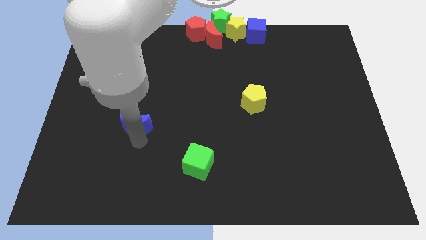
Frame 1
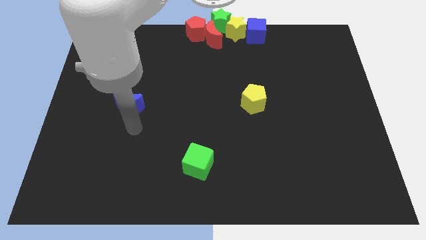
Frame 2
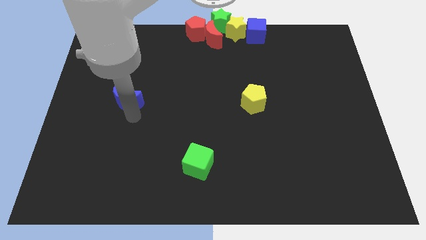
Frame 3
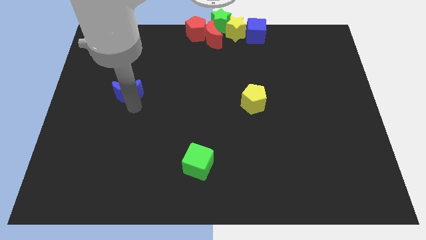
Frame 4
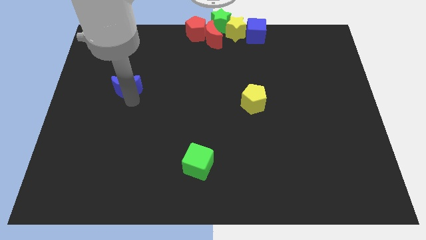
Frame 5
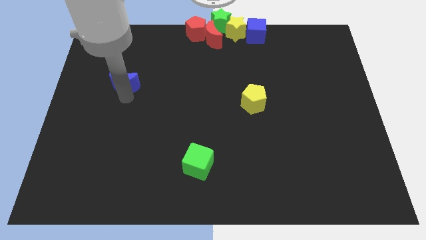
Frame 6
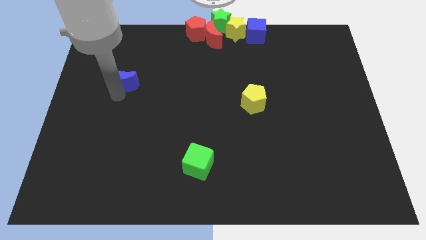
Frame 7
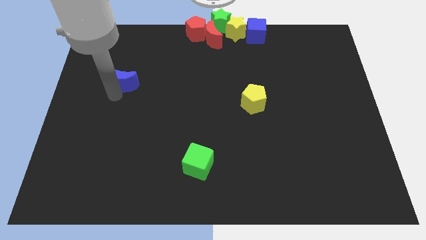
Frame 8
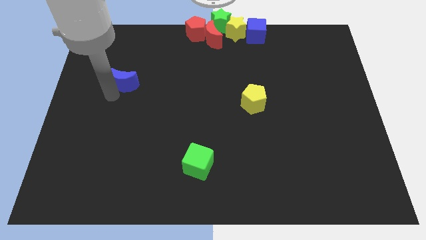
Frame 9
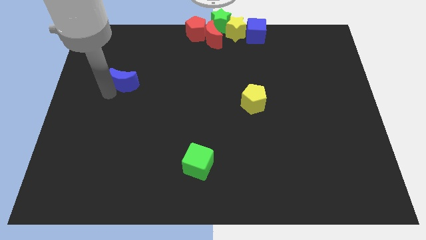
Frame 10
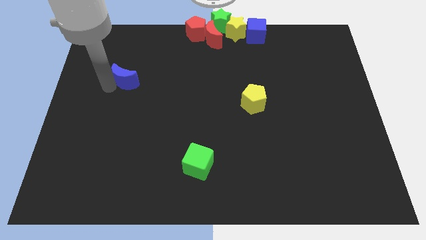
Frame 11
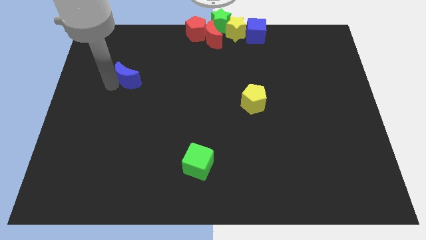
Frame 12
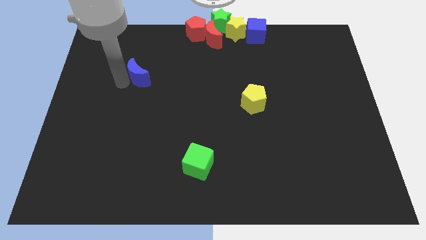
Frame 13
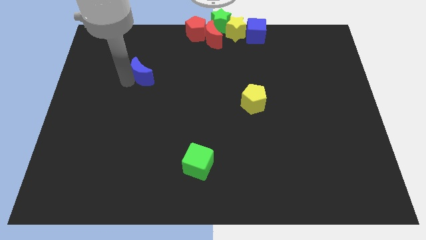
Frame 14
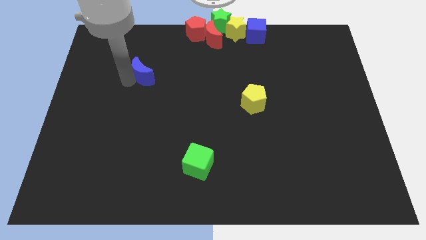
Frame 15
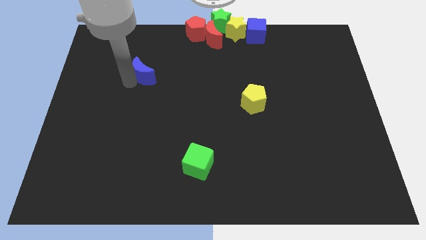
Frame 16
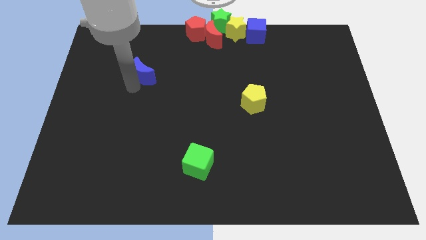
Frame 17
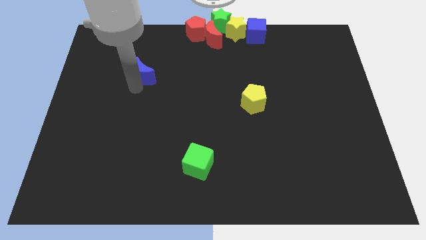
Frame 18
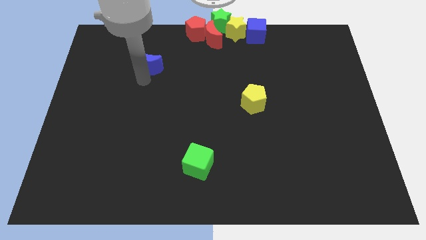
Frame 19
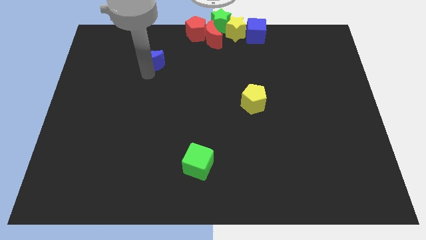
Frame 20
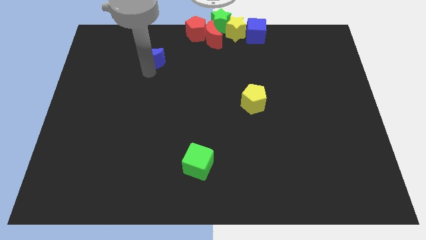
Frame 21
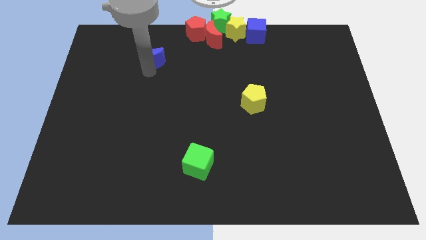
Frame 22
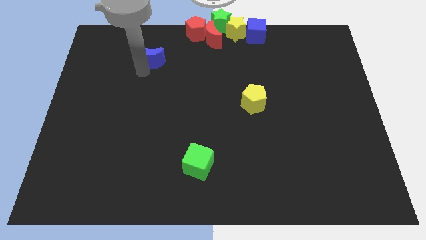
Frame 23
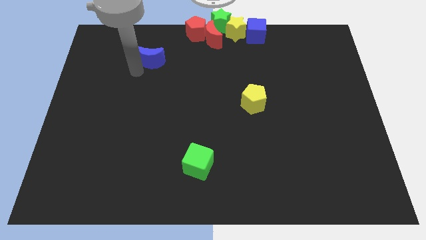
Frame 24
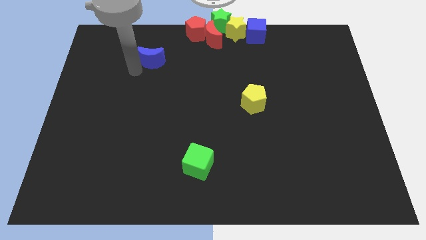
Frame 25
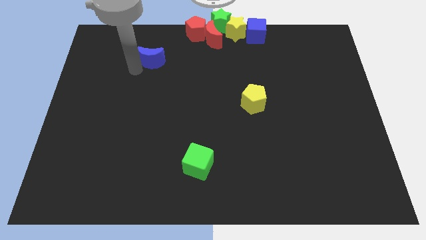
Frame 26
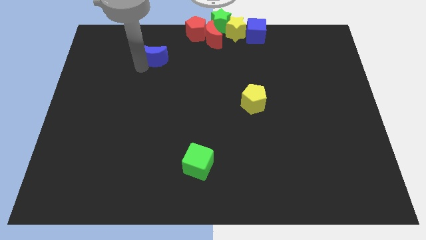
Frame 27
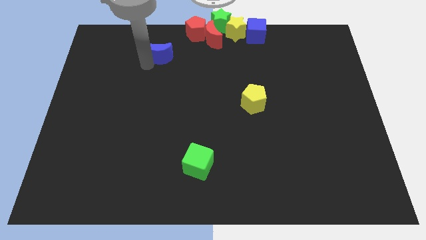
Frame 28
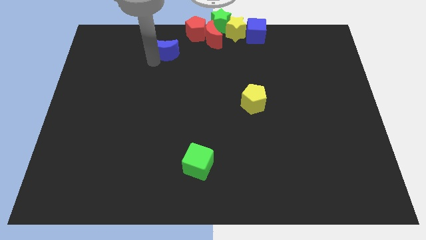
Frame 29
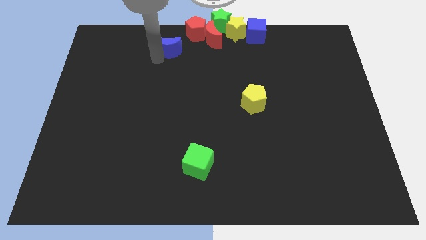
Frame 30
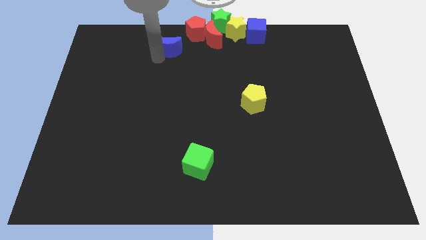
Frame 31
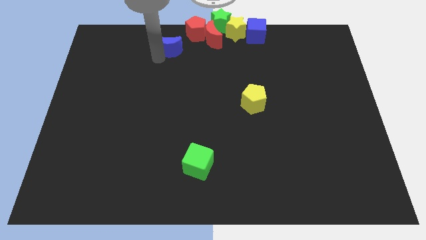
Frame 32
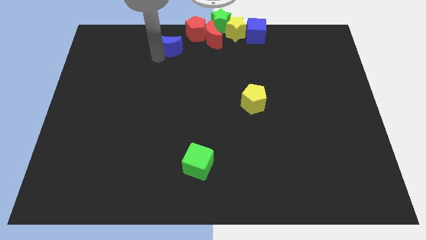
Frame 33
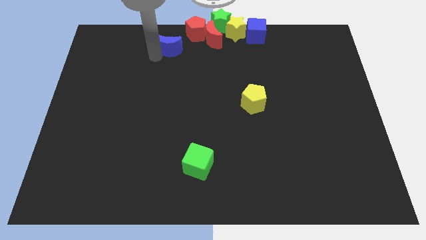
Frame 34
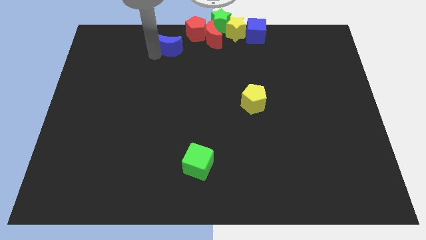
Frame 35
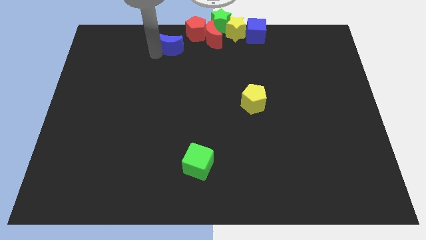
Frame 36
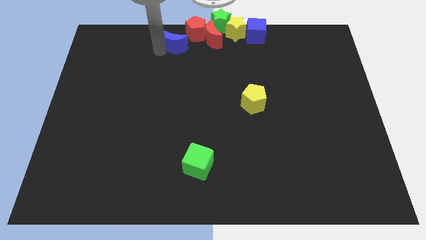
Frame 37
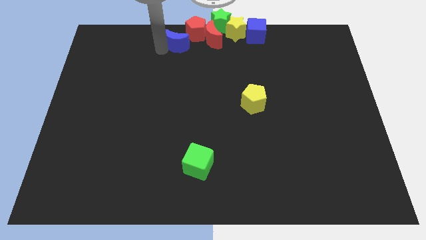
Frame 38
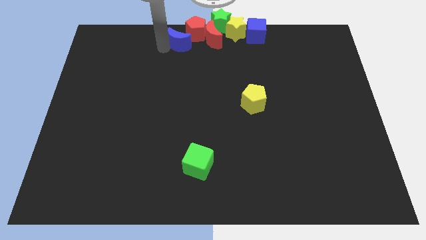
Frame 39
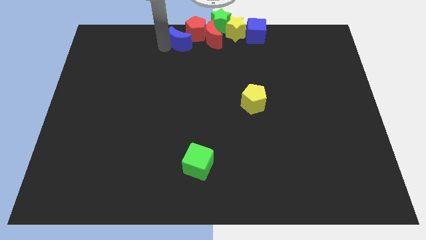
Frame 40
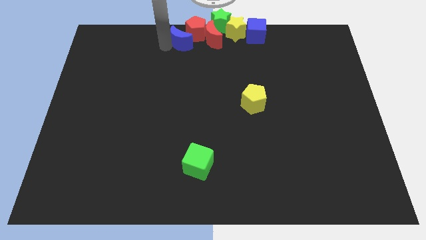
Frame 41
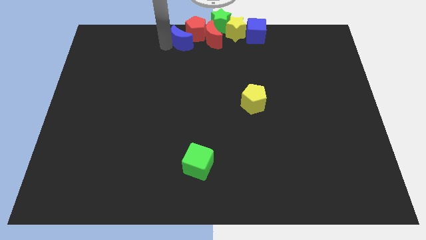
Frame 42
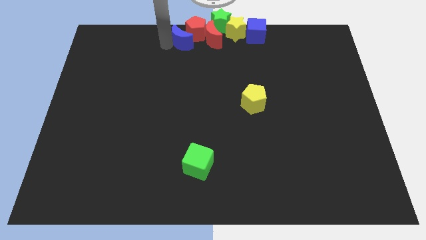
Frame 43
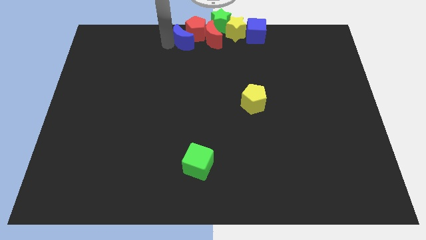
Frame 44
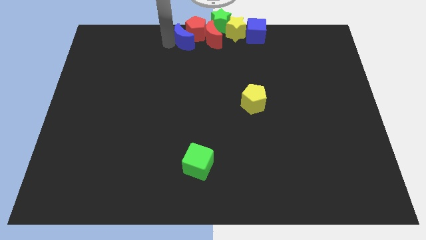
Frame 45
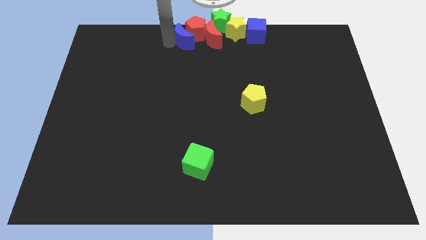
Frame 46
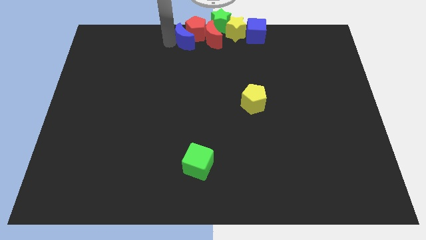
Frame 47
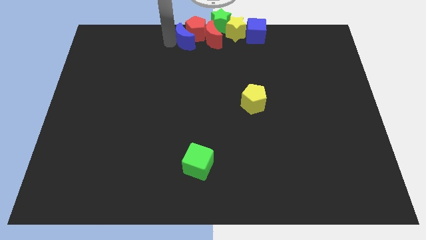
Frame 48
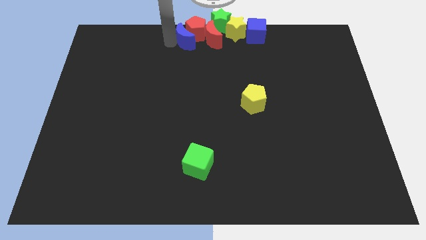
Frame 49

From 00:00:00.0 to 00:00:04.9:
place the blue moon to the left of the red pentagon

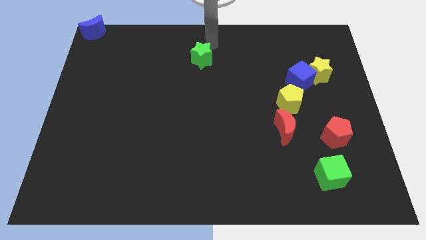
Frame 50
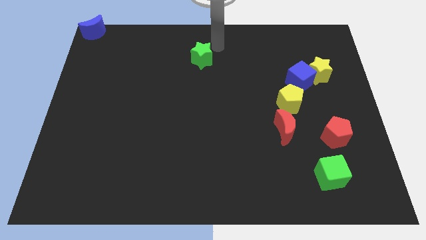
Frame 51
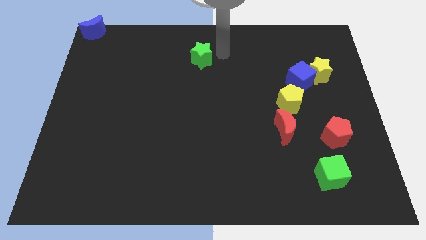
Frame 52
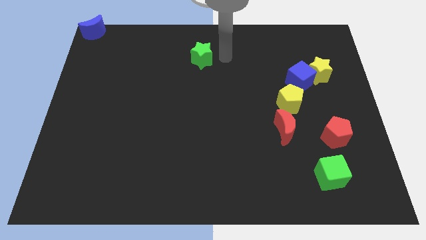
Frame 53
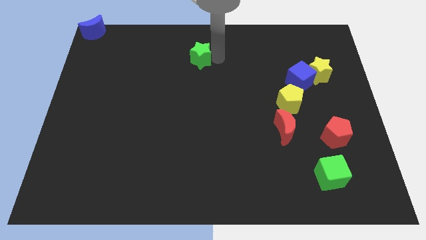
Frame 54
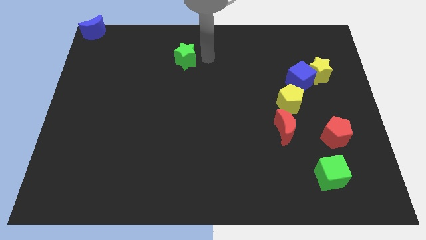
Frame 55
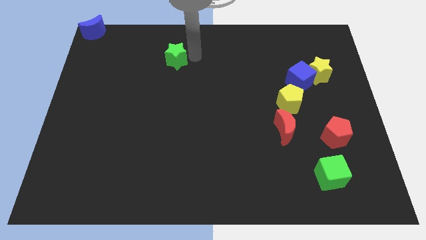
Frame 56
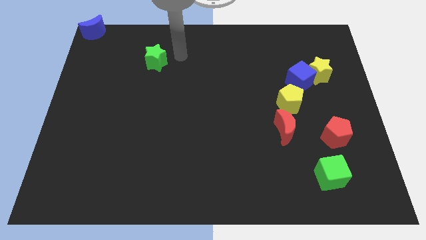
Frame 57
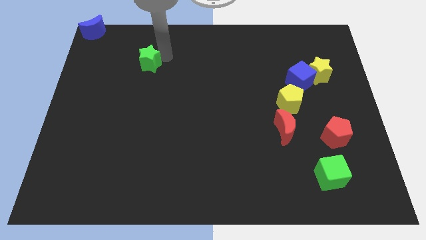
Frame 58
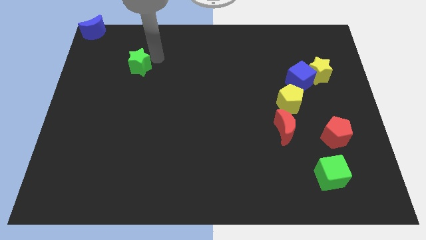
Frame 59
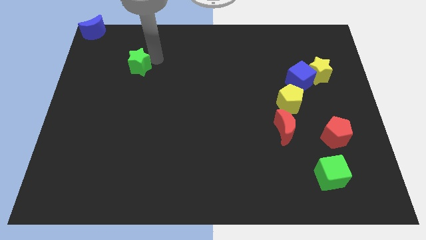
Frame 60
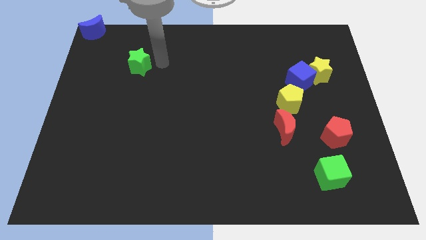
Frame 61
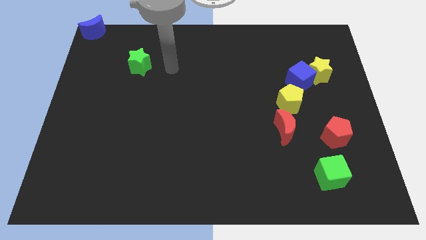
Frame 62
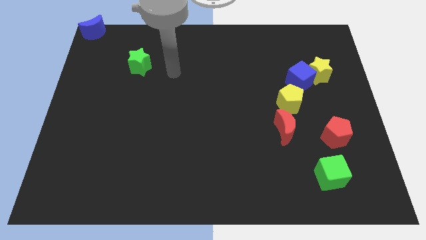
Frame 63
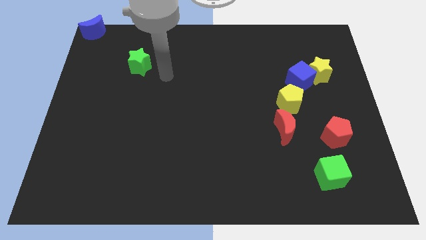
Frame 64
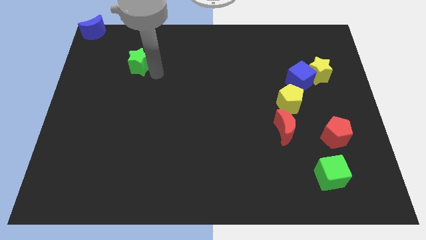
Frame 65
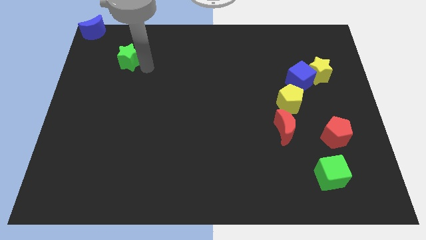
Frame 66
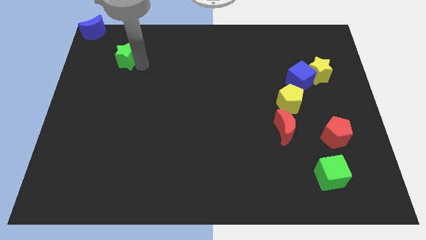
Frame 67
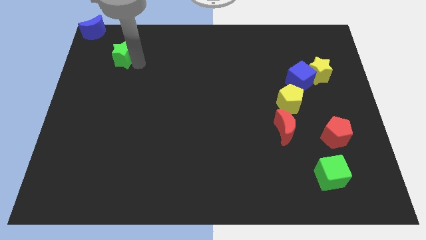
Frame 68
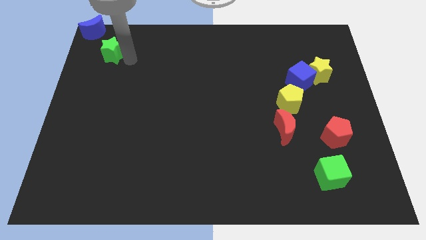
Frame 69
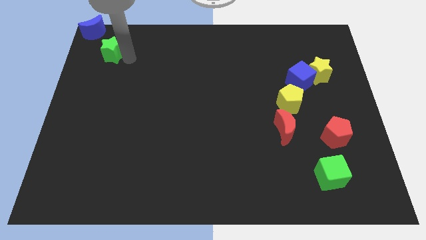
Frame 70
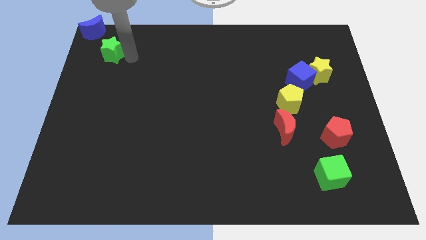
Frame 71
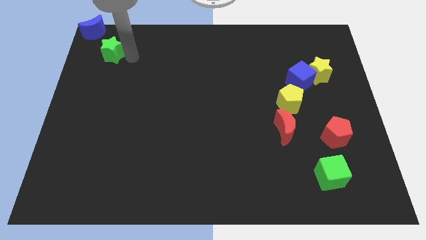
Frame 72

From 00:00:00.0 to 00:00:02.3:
move green star close to the blue crescent

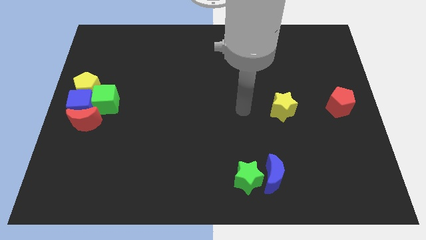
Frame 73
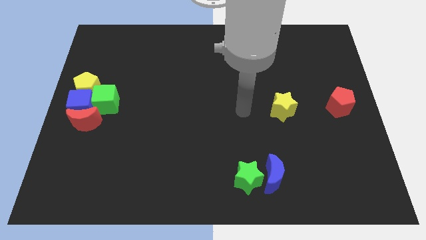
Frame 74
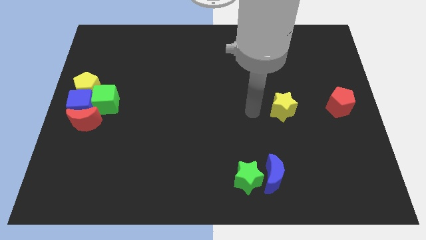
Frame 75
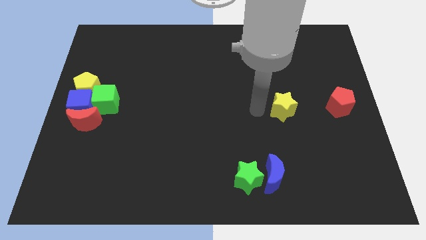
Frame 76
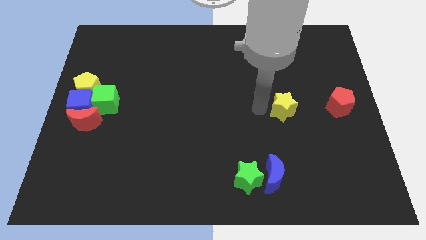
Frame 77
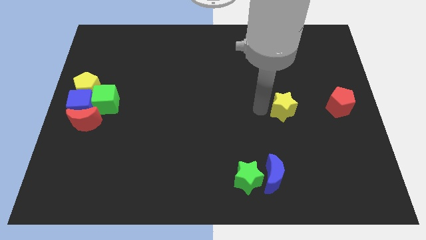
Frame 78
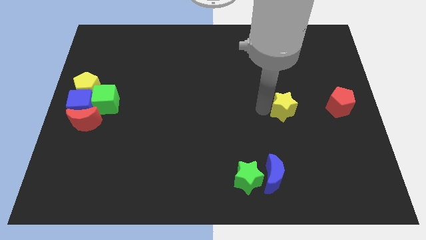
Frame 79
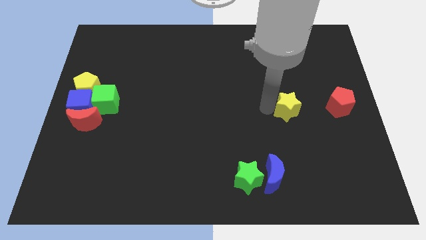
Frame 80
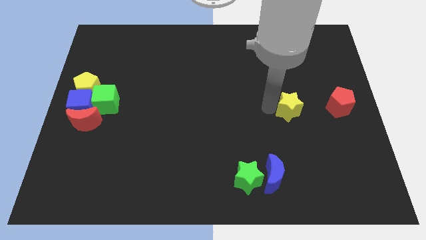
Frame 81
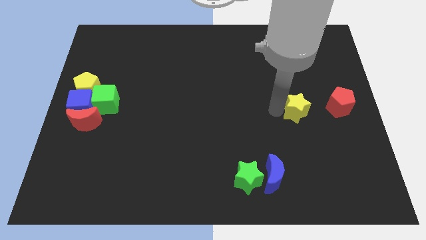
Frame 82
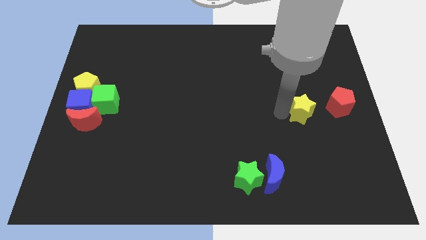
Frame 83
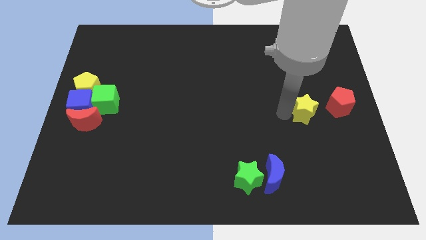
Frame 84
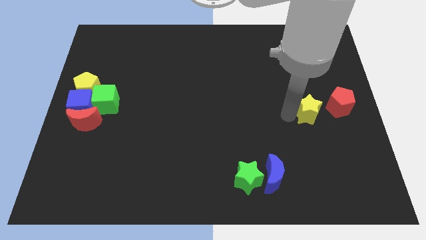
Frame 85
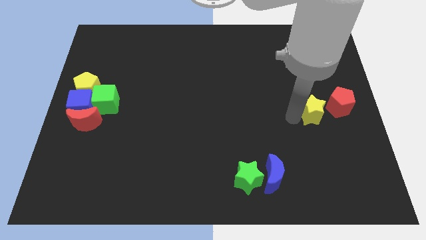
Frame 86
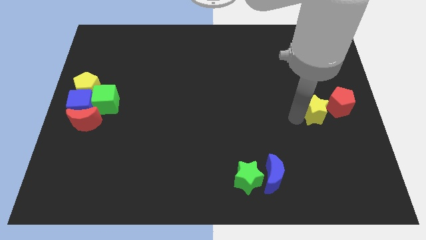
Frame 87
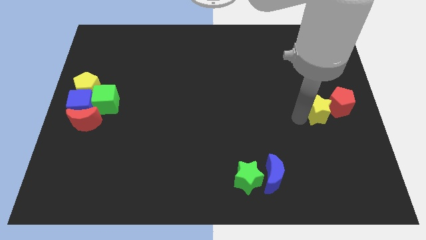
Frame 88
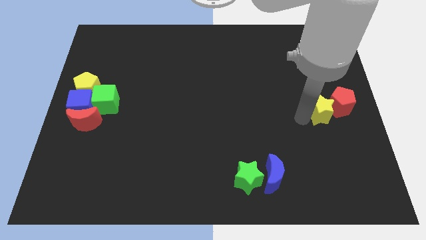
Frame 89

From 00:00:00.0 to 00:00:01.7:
push the yellow star into red pentagon at the left
